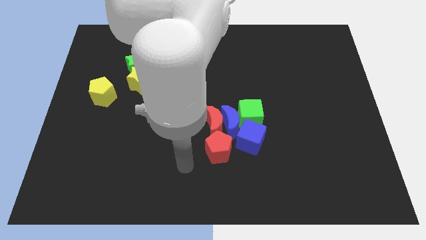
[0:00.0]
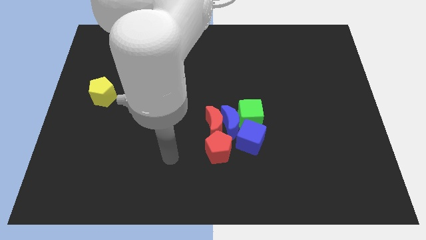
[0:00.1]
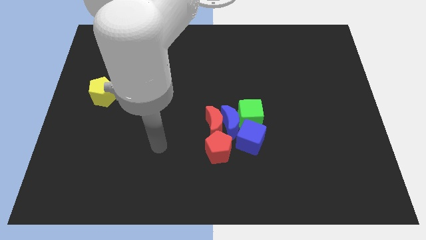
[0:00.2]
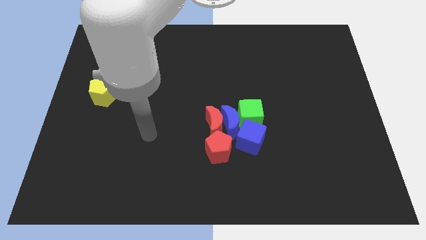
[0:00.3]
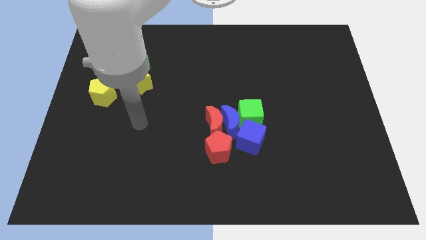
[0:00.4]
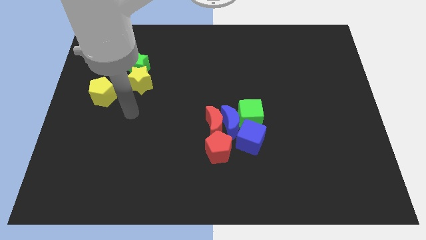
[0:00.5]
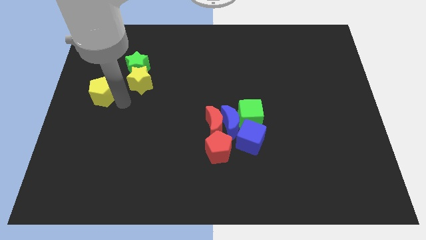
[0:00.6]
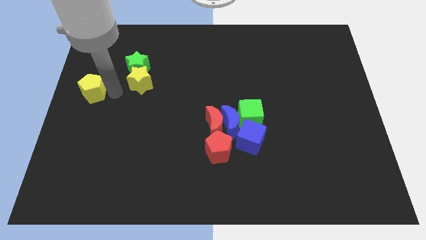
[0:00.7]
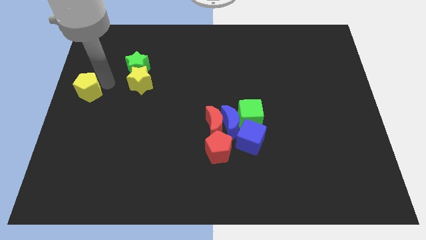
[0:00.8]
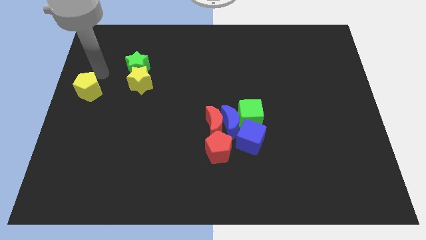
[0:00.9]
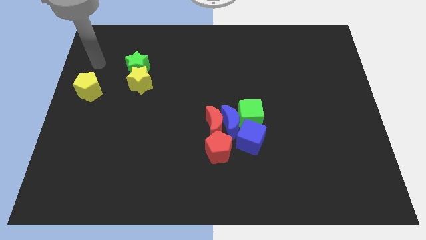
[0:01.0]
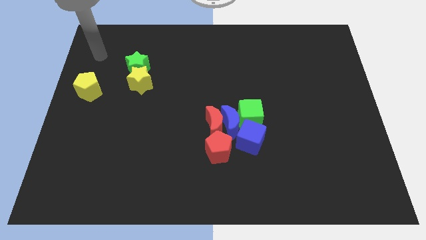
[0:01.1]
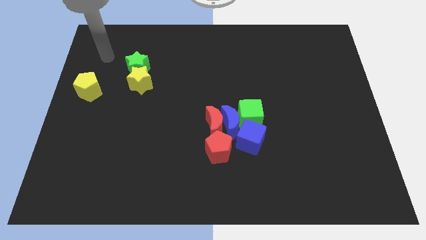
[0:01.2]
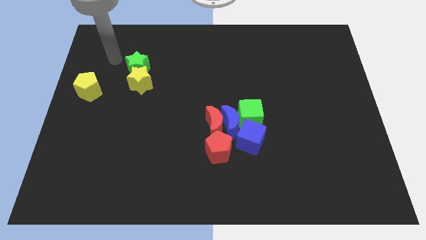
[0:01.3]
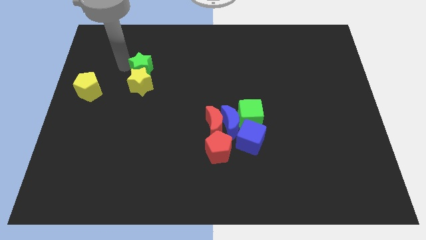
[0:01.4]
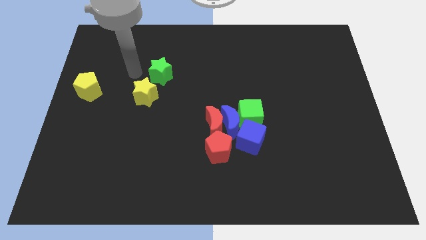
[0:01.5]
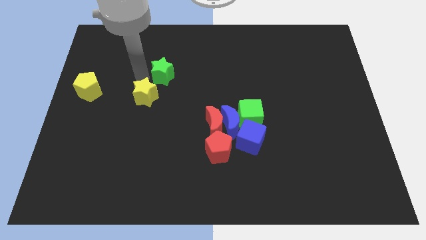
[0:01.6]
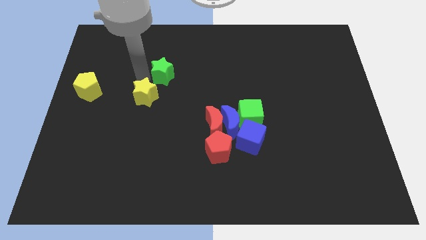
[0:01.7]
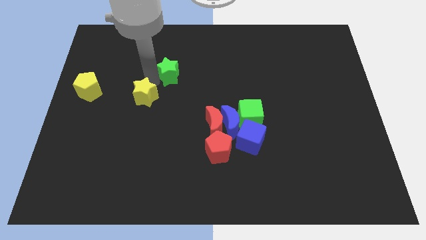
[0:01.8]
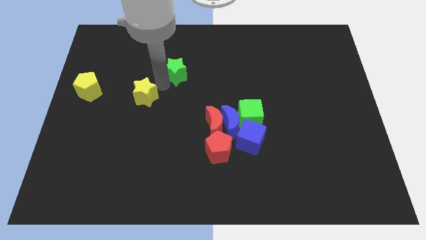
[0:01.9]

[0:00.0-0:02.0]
move your arm into the green star

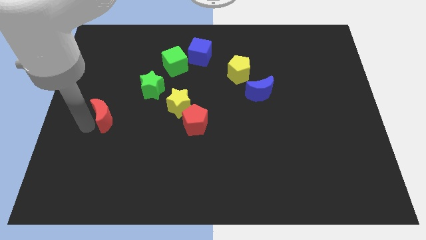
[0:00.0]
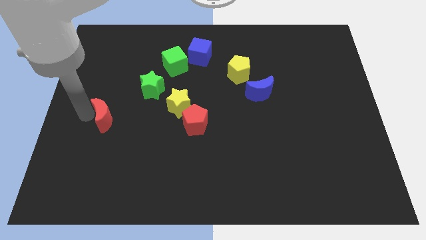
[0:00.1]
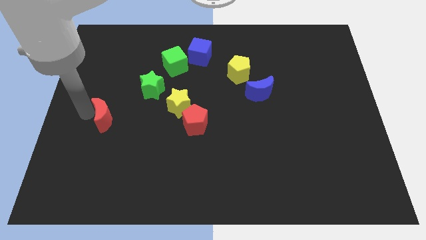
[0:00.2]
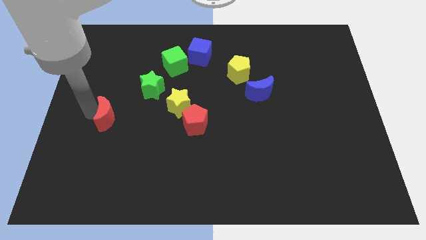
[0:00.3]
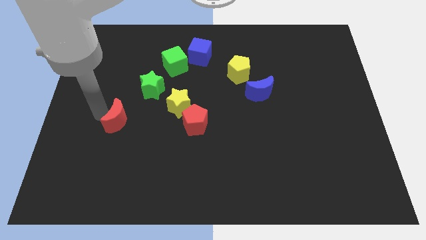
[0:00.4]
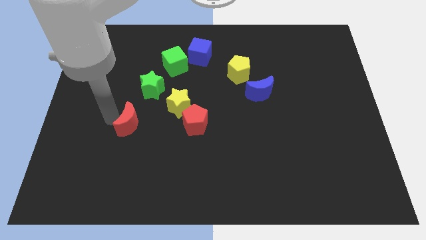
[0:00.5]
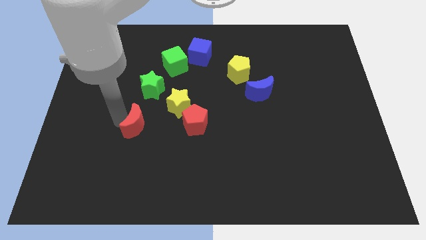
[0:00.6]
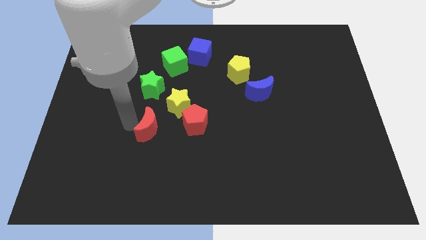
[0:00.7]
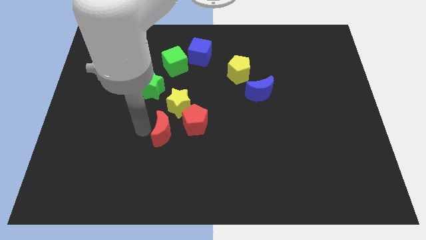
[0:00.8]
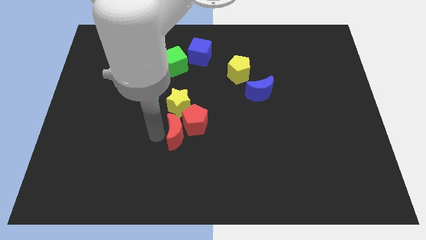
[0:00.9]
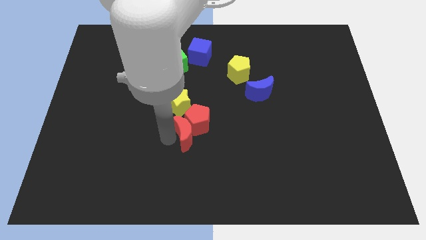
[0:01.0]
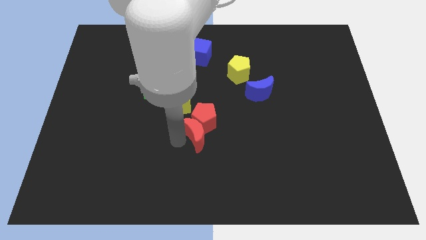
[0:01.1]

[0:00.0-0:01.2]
place the red moon down to the yellow star

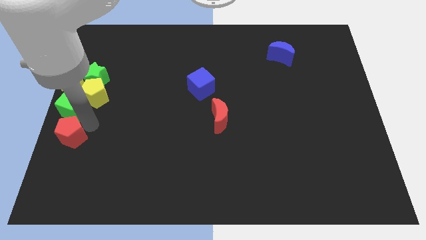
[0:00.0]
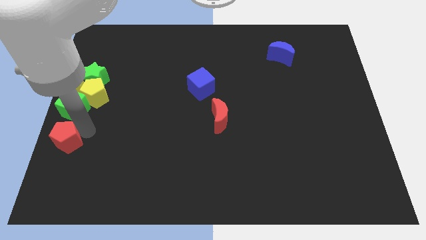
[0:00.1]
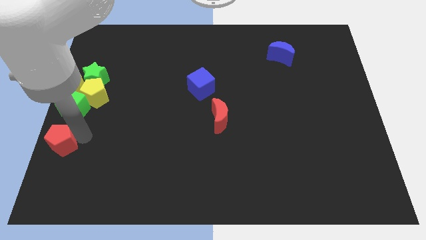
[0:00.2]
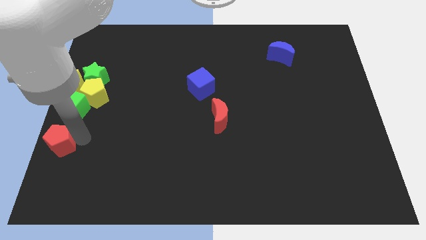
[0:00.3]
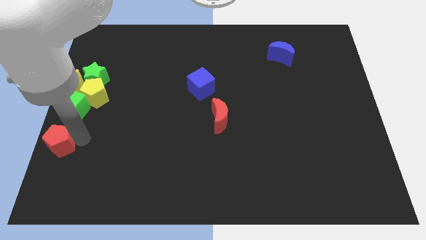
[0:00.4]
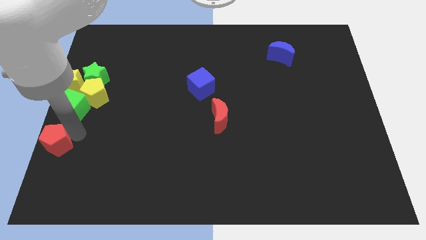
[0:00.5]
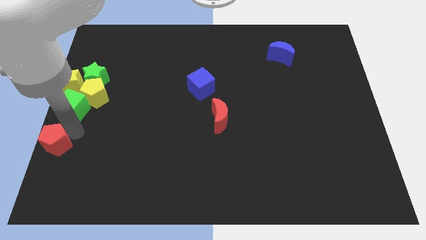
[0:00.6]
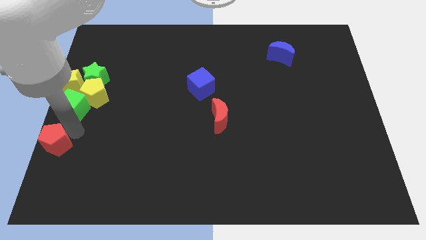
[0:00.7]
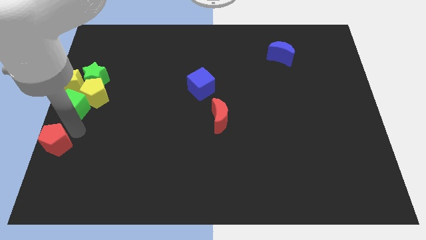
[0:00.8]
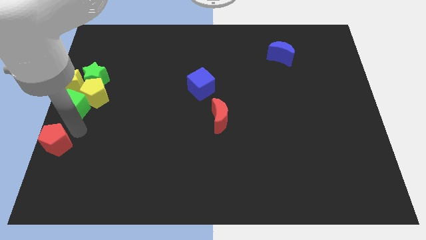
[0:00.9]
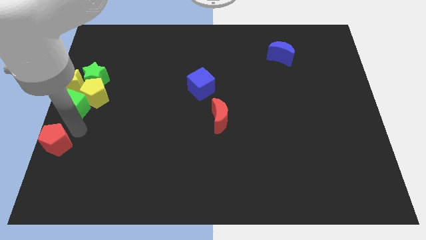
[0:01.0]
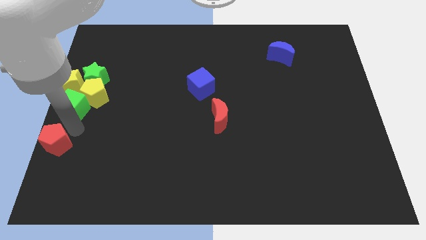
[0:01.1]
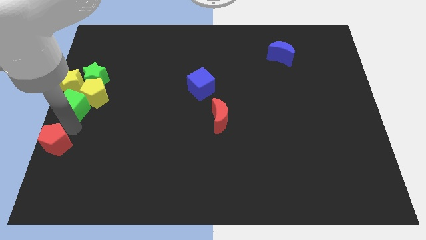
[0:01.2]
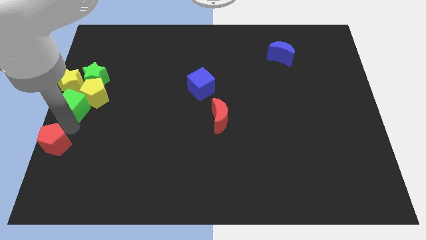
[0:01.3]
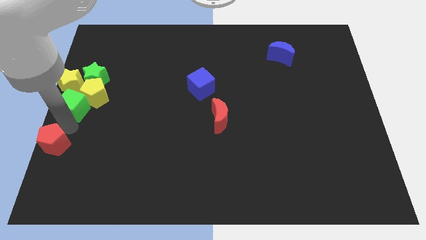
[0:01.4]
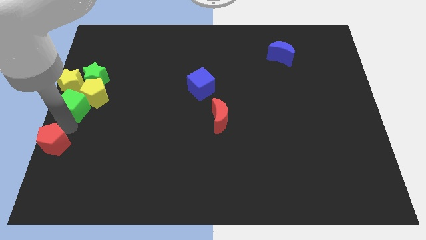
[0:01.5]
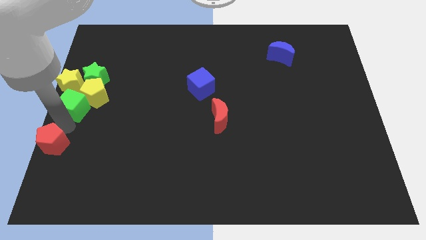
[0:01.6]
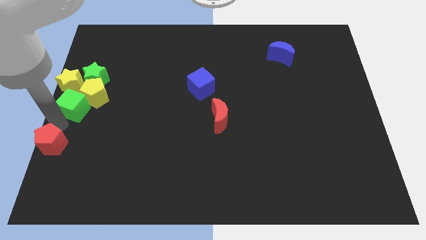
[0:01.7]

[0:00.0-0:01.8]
drag the red pentagon to the left side of the board

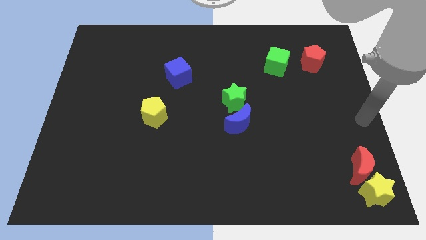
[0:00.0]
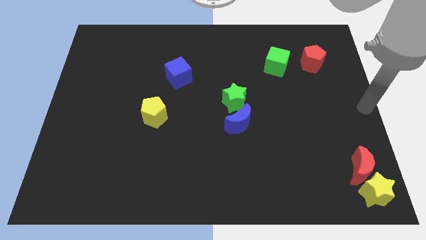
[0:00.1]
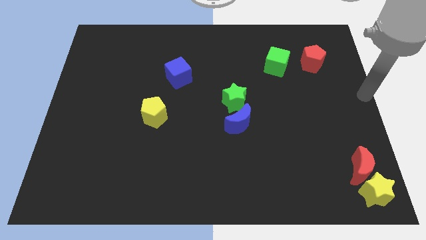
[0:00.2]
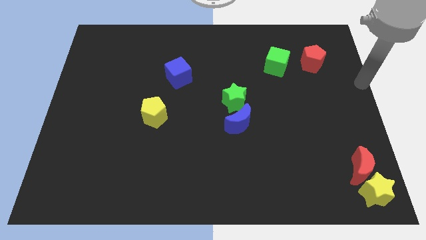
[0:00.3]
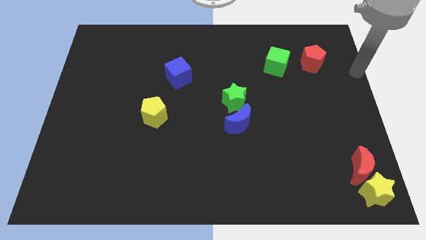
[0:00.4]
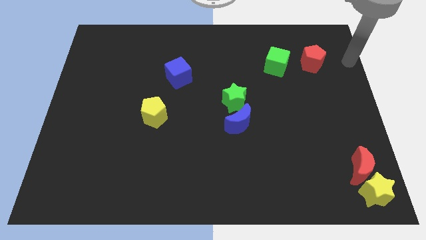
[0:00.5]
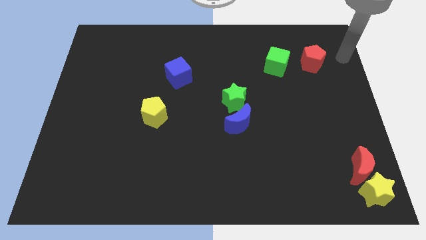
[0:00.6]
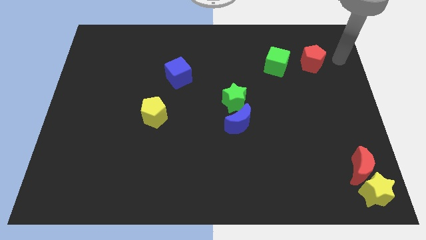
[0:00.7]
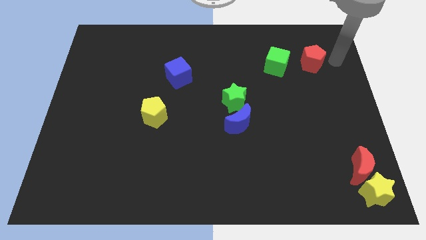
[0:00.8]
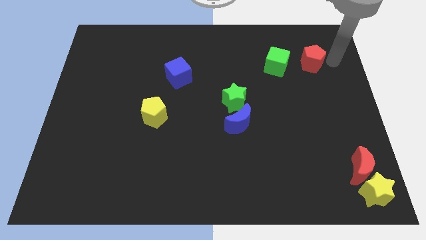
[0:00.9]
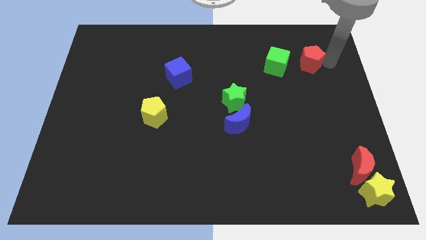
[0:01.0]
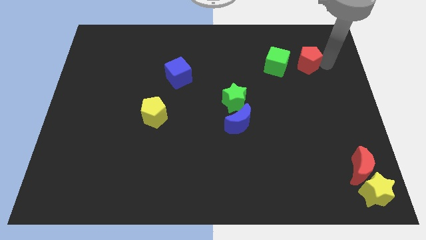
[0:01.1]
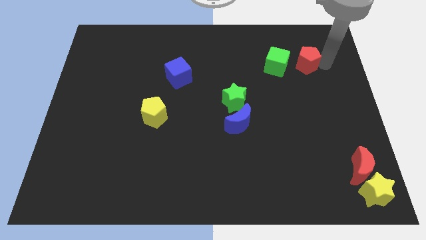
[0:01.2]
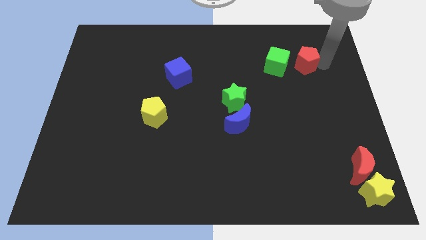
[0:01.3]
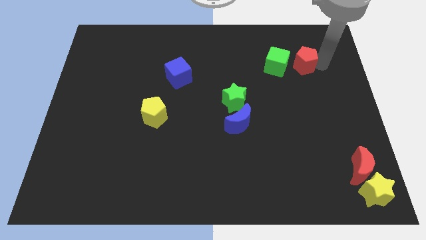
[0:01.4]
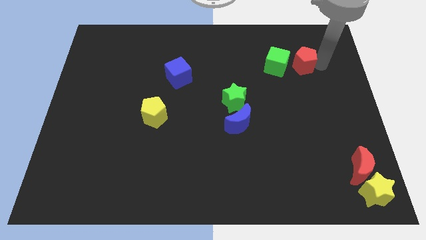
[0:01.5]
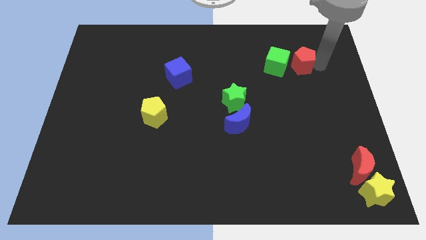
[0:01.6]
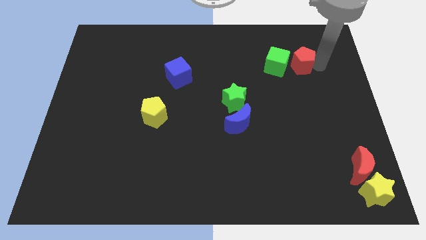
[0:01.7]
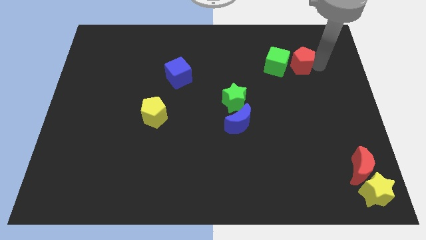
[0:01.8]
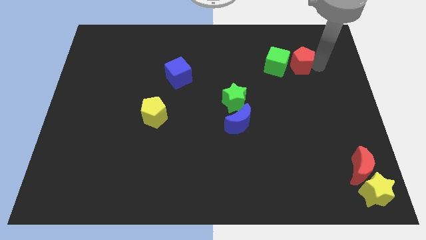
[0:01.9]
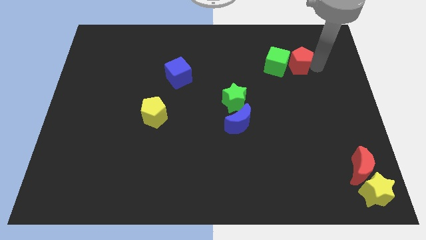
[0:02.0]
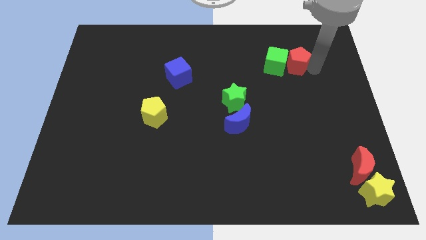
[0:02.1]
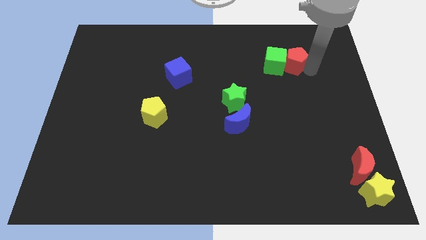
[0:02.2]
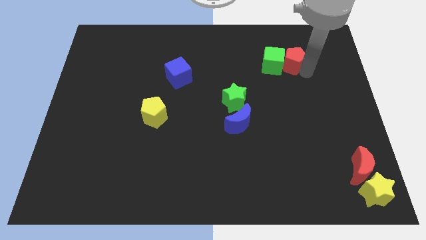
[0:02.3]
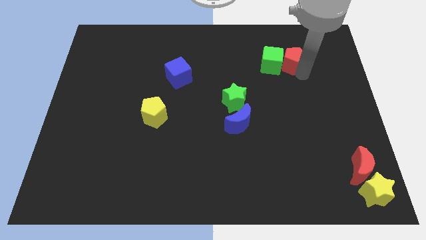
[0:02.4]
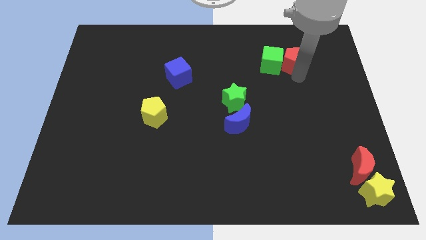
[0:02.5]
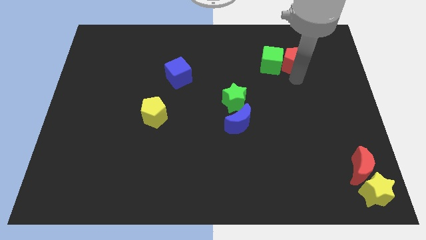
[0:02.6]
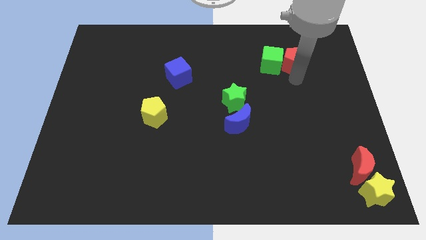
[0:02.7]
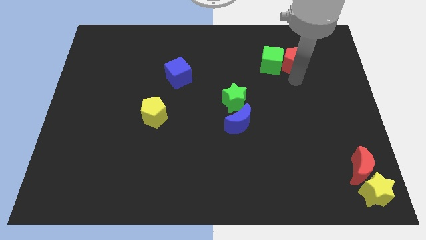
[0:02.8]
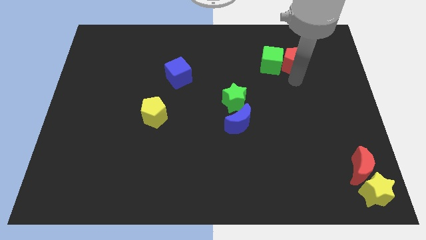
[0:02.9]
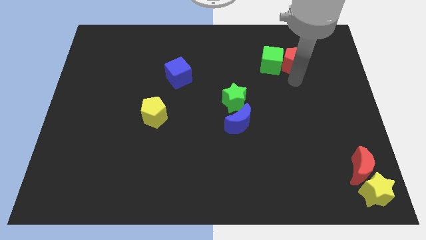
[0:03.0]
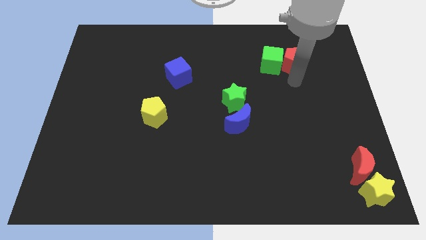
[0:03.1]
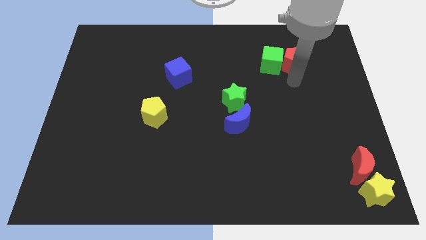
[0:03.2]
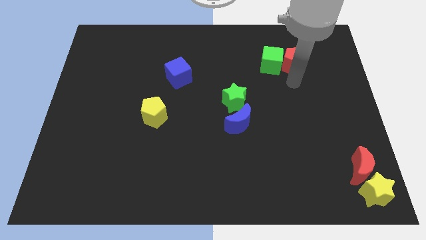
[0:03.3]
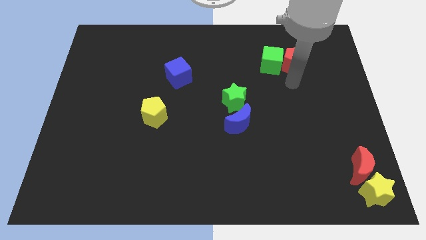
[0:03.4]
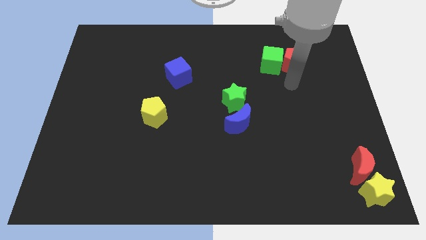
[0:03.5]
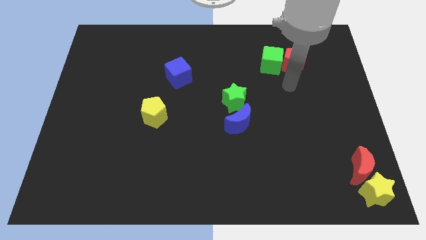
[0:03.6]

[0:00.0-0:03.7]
push the red pentagon into green cube

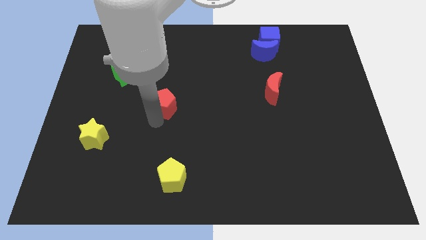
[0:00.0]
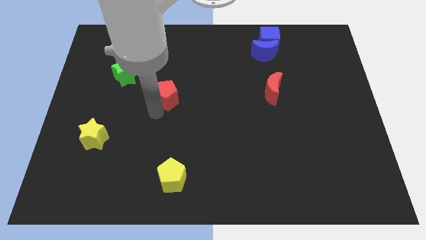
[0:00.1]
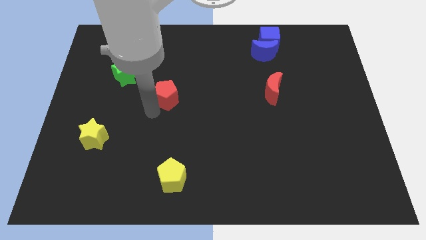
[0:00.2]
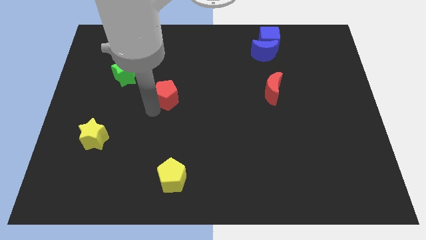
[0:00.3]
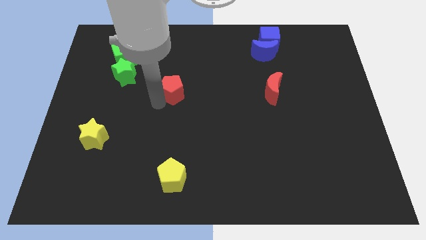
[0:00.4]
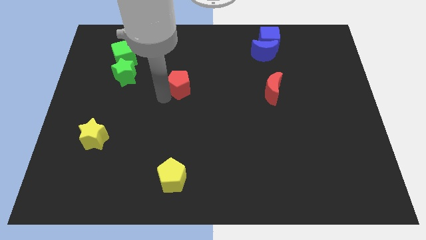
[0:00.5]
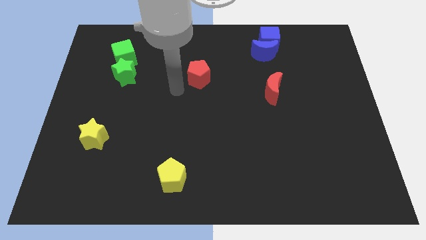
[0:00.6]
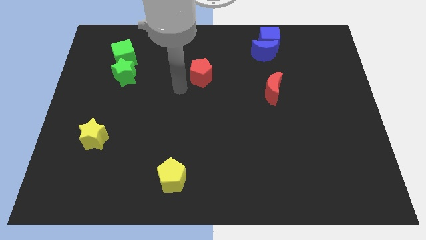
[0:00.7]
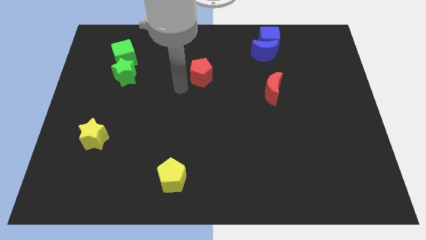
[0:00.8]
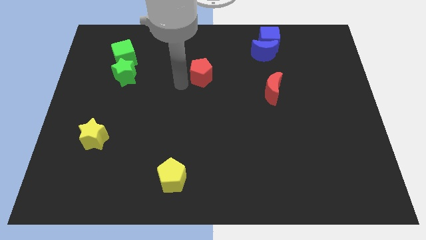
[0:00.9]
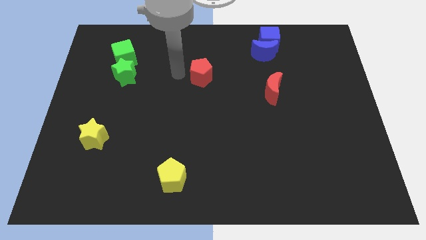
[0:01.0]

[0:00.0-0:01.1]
move the red pentagon to the right of the green star
